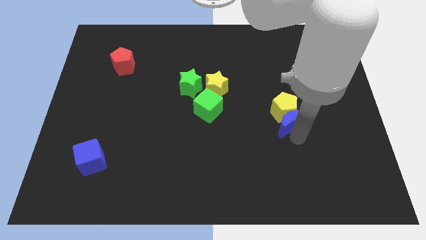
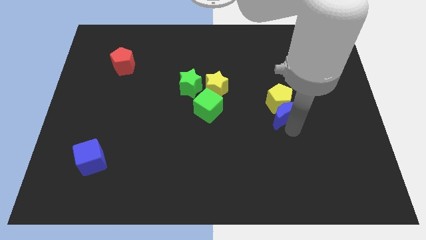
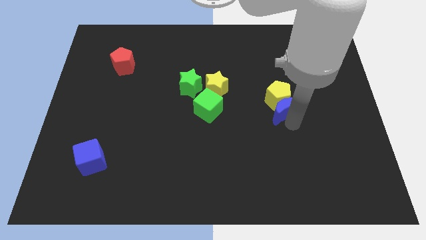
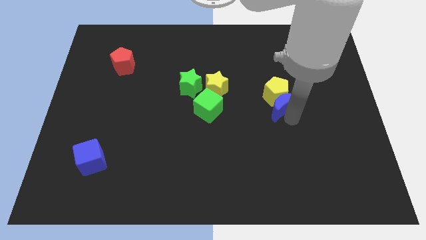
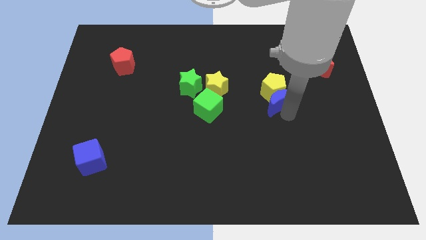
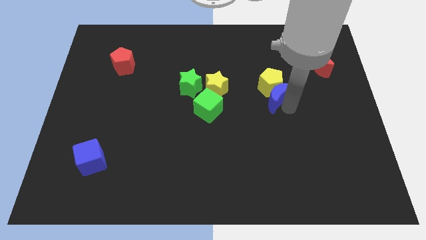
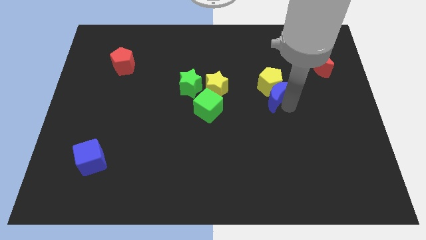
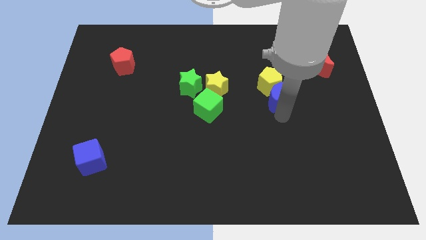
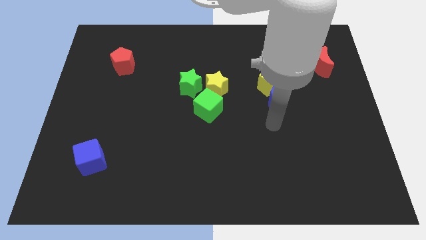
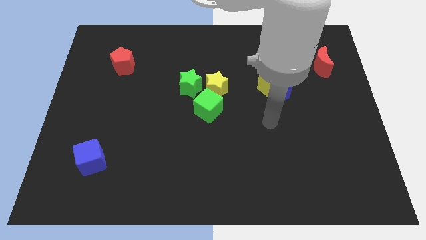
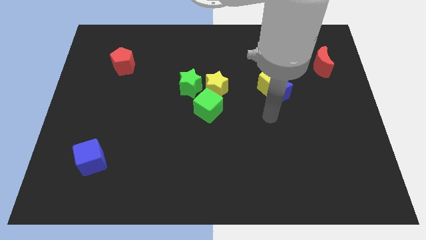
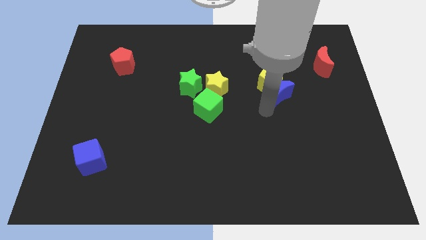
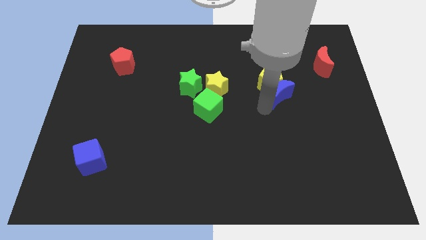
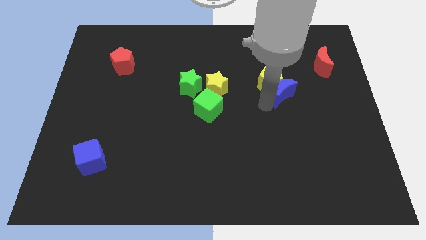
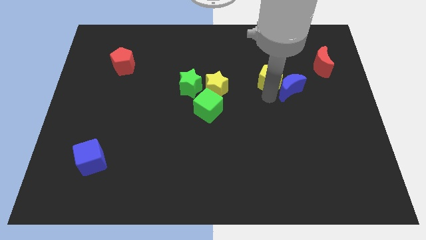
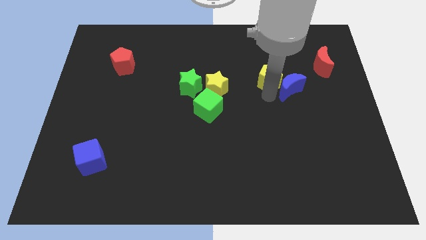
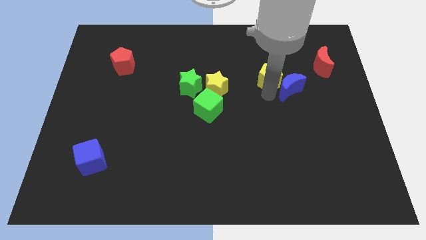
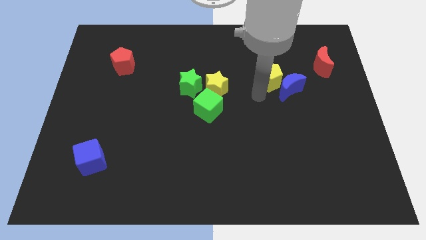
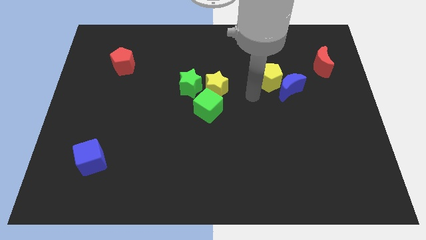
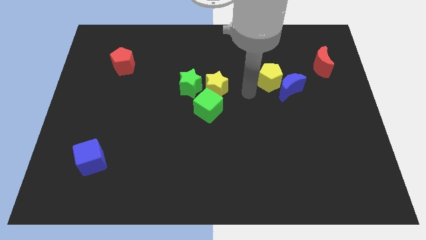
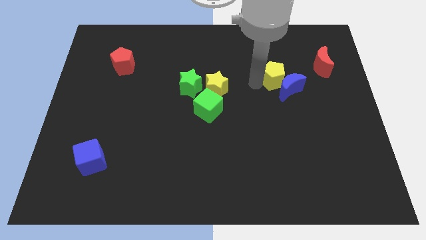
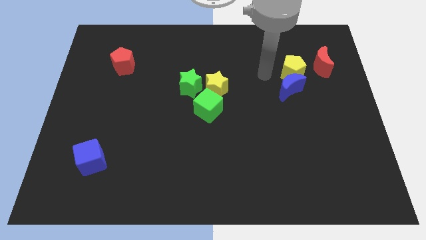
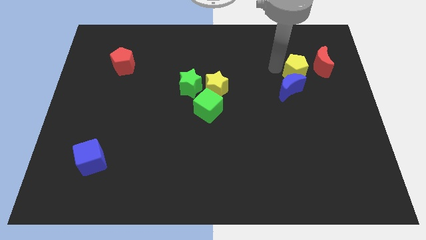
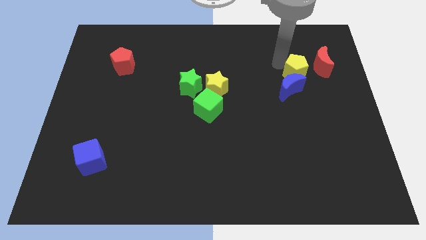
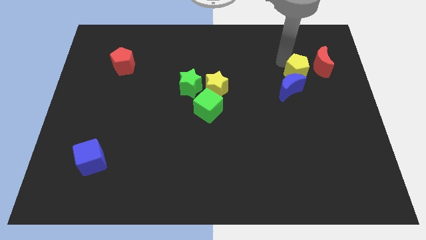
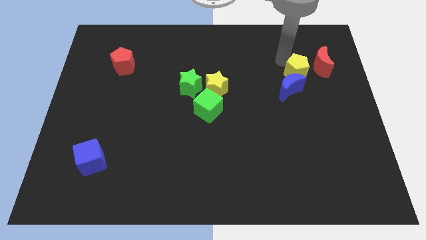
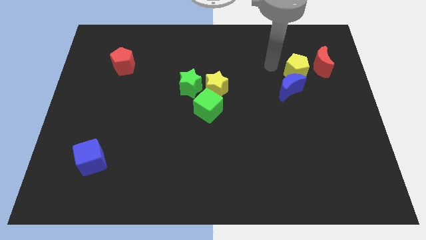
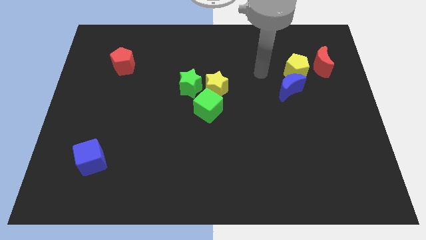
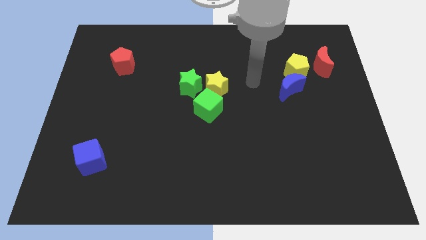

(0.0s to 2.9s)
place the yellow pentagon left to the red moon

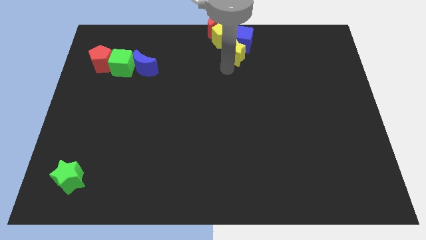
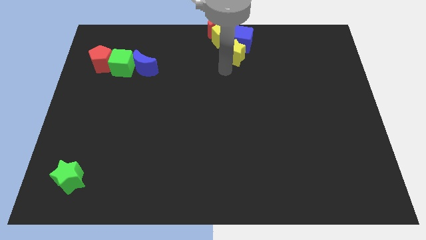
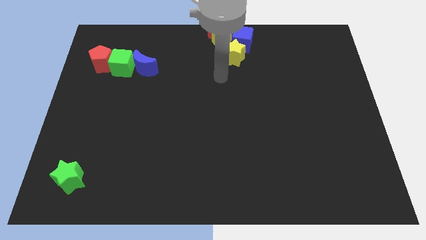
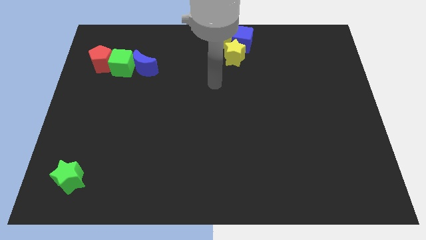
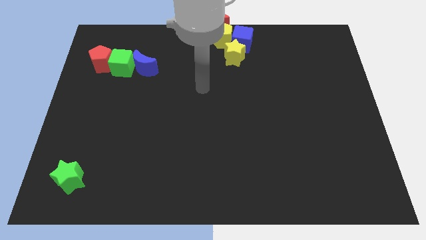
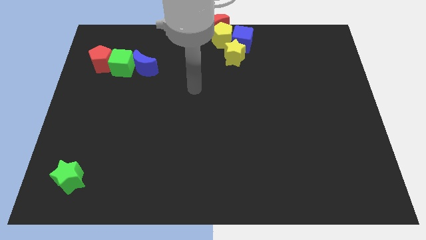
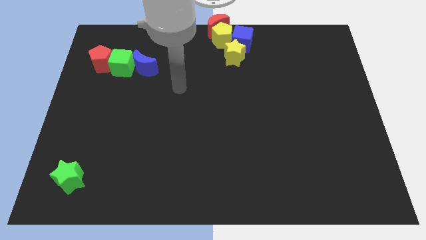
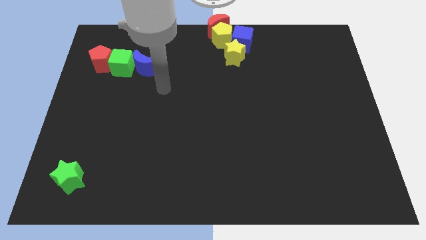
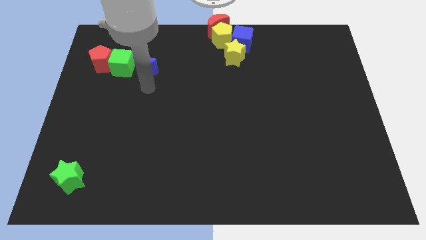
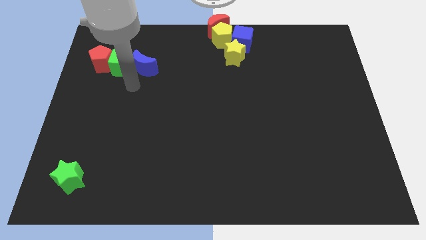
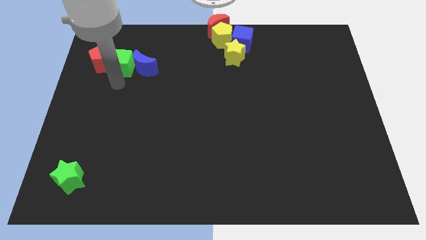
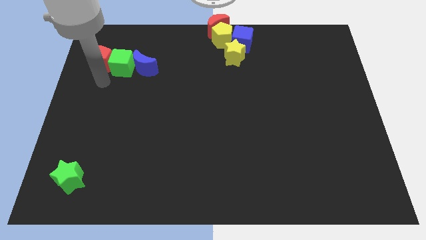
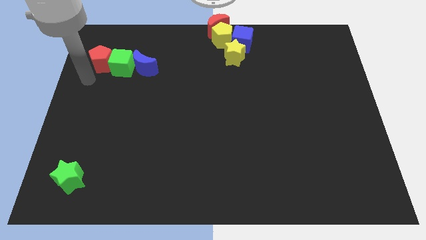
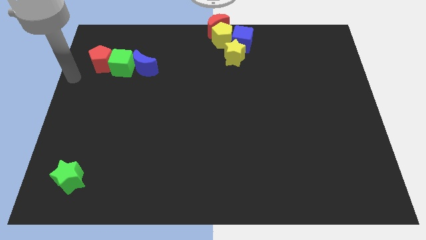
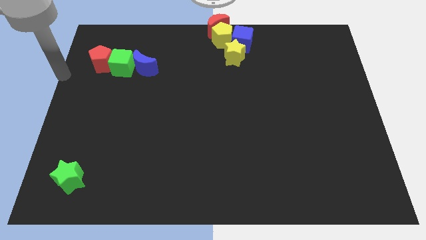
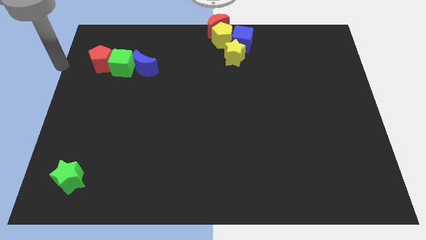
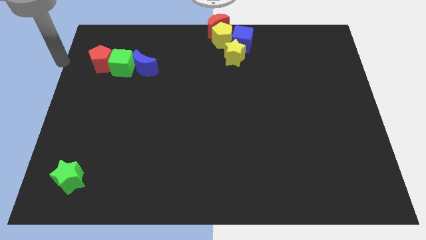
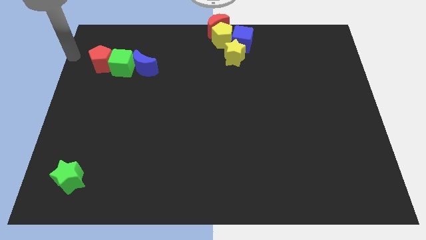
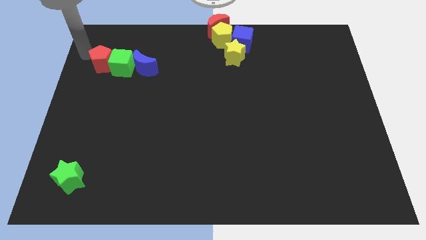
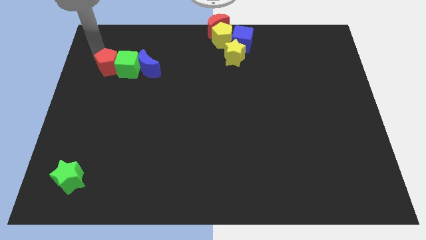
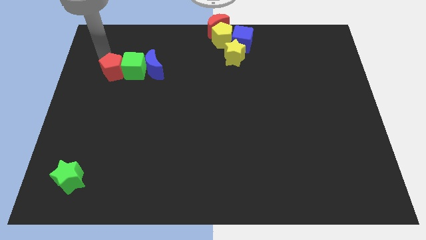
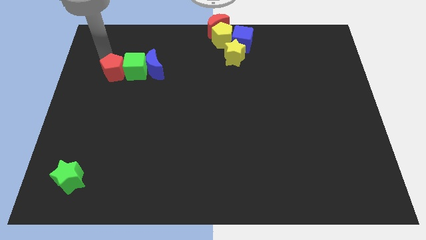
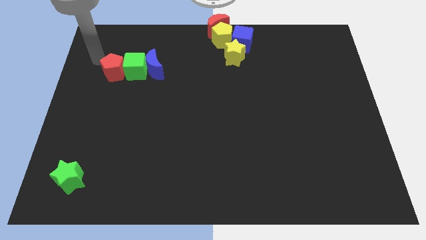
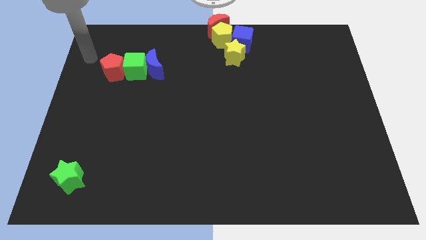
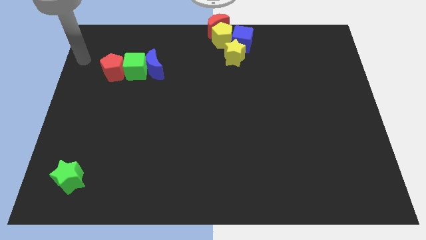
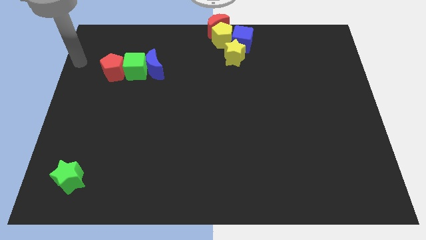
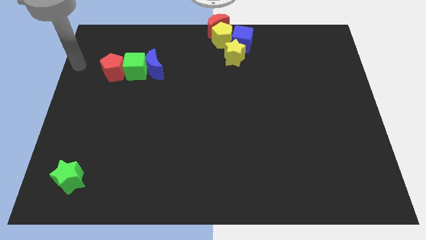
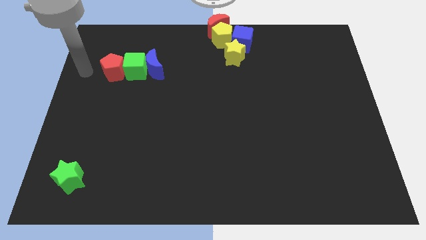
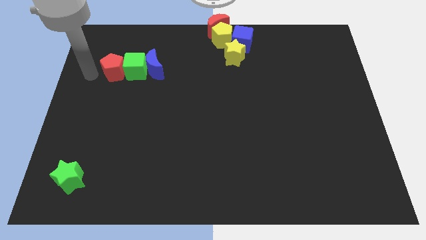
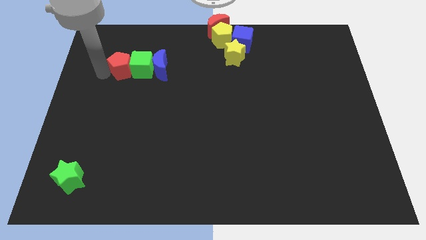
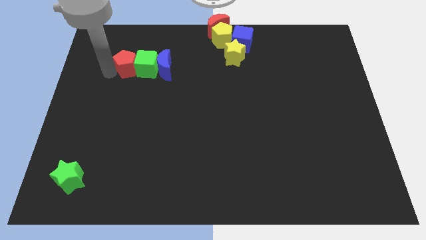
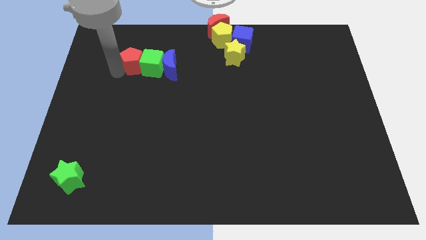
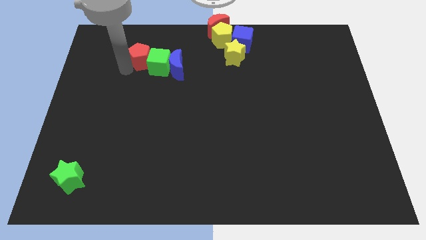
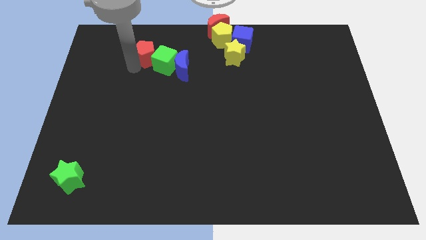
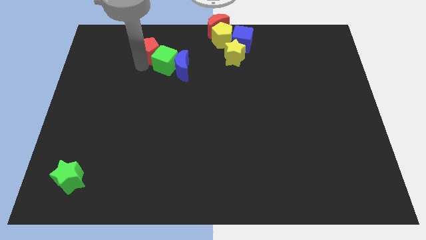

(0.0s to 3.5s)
push the red moon into the green cube

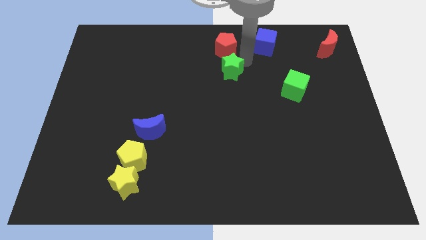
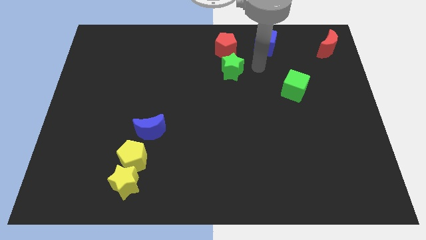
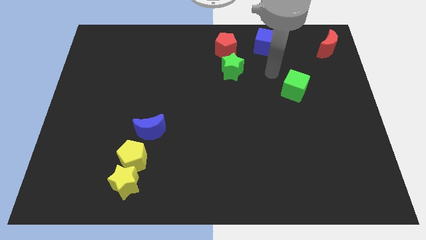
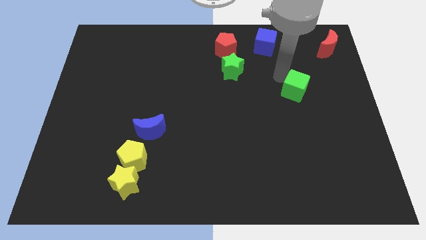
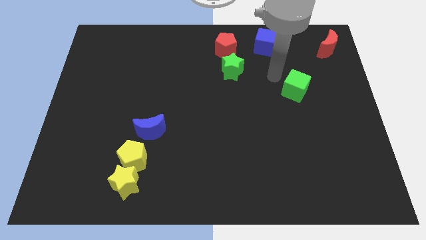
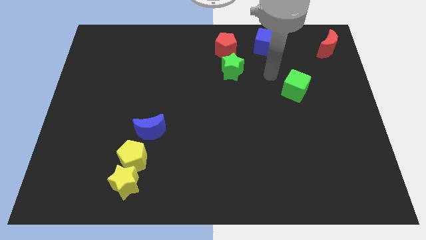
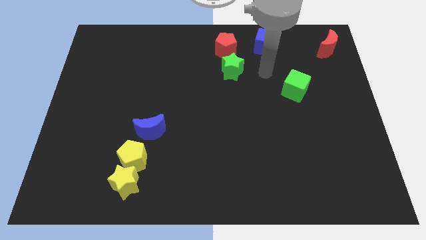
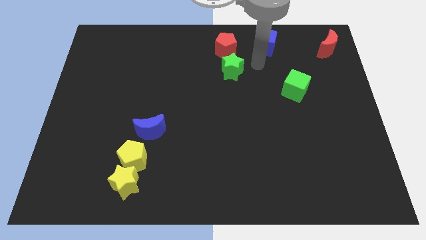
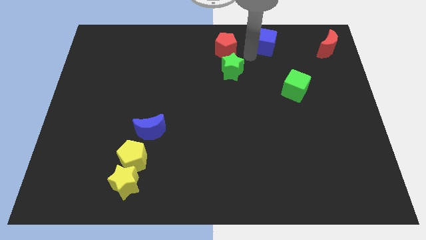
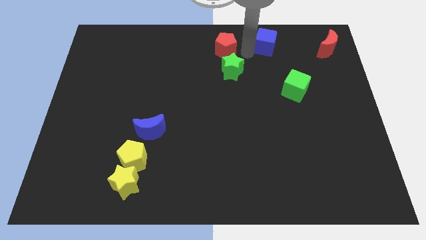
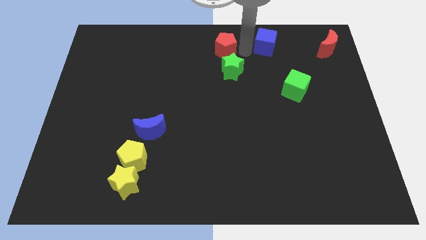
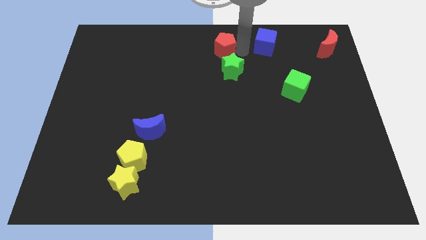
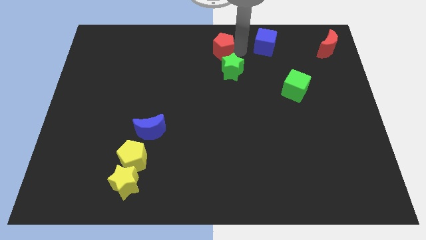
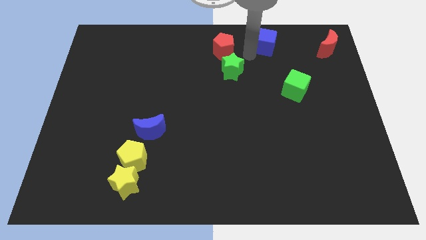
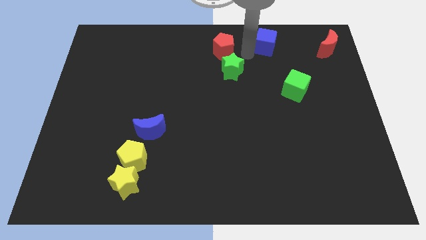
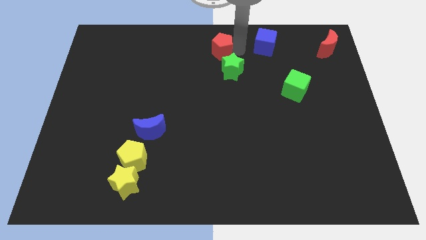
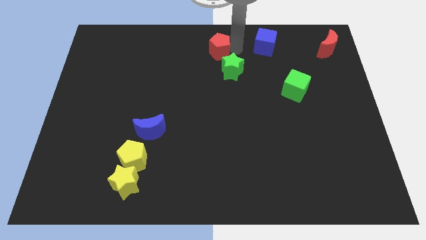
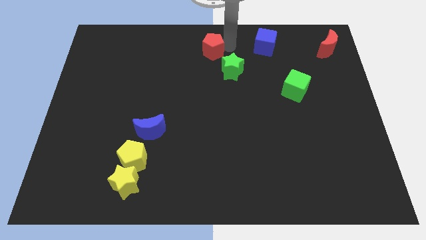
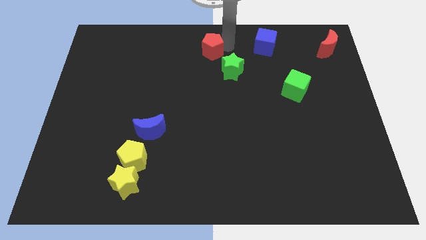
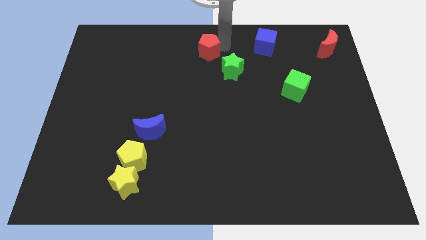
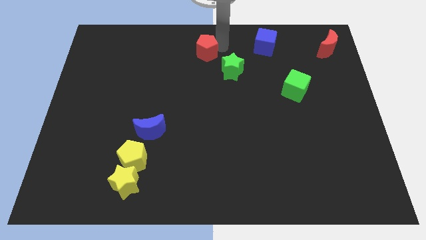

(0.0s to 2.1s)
slide the red pentagon diagonally to the green star

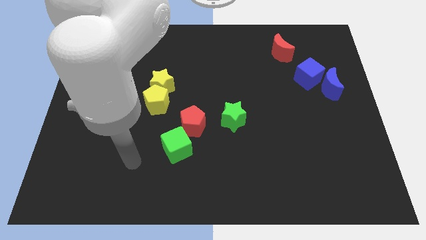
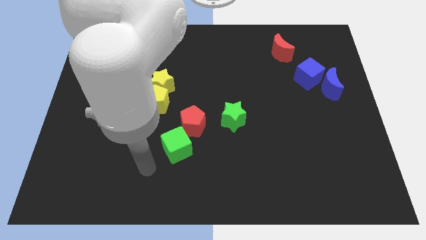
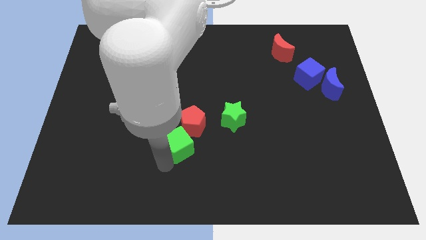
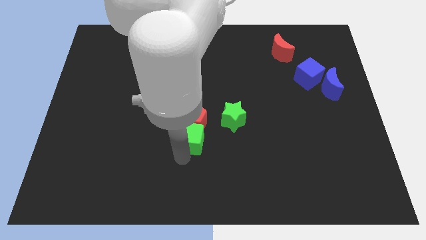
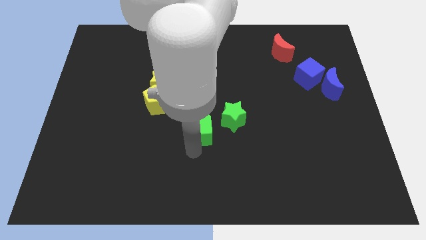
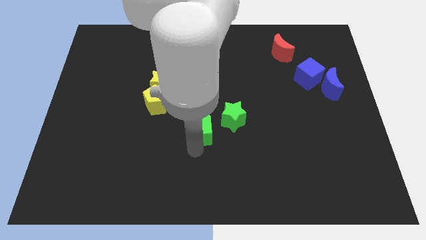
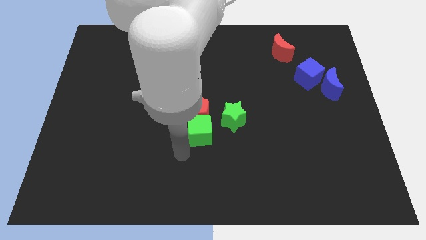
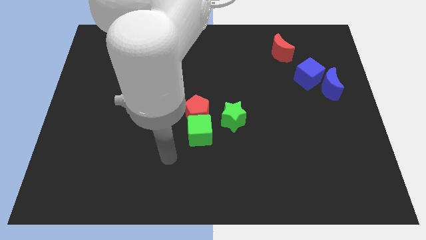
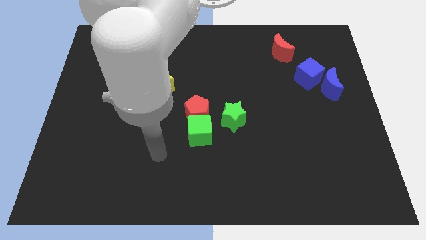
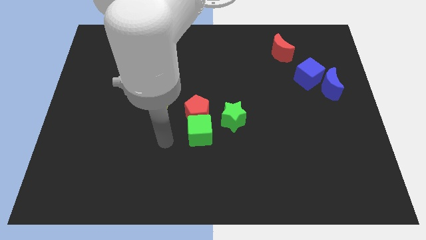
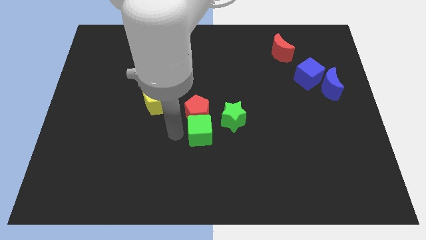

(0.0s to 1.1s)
slide green cube below red pentagon
